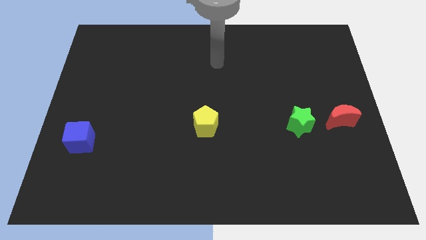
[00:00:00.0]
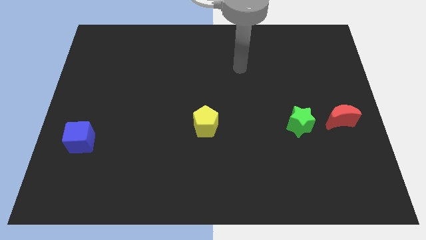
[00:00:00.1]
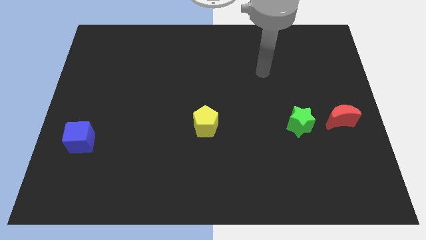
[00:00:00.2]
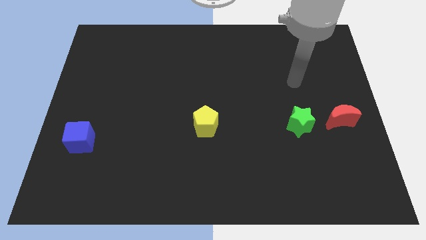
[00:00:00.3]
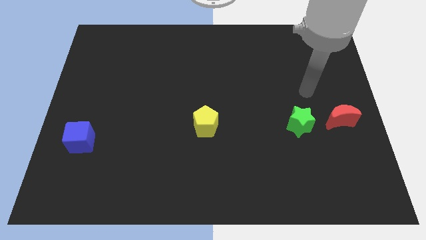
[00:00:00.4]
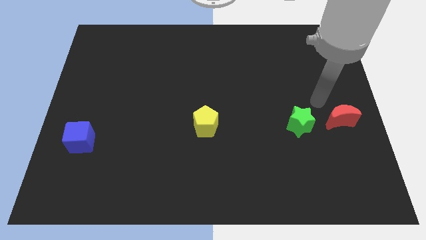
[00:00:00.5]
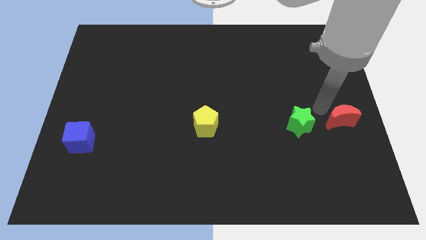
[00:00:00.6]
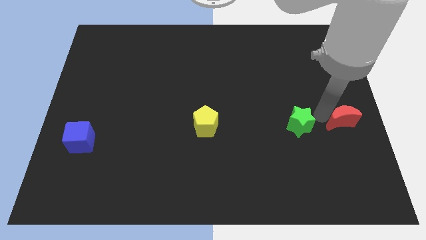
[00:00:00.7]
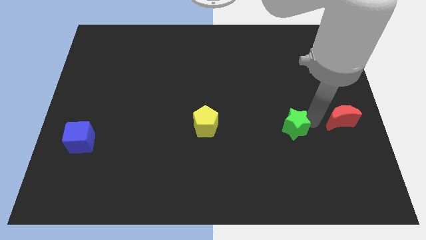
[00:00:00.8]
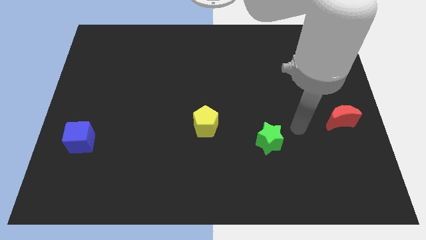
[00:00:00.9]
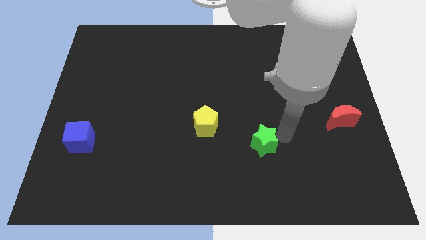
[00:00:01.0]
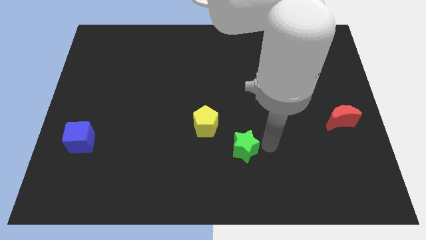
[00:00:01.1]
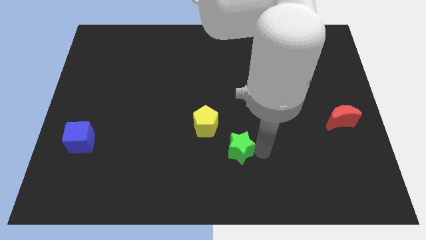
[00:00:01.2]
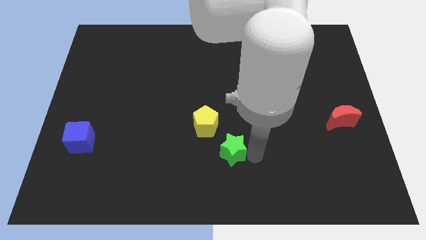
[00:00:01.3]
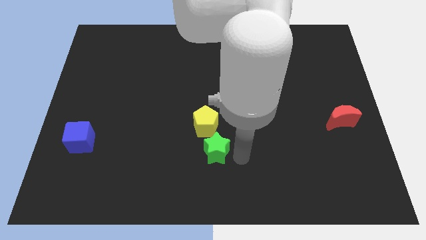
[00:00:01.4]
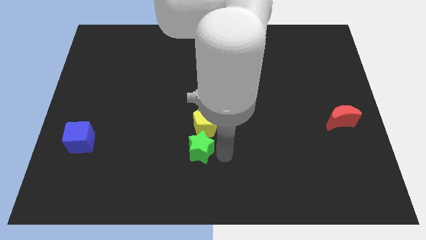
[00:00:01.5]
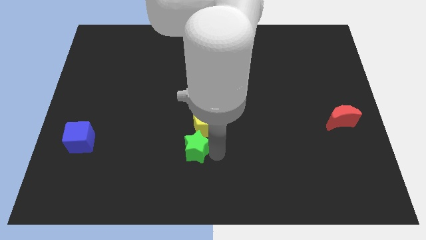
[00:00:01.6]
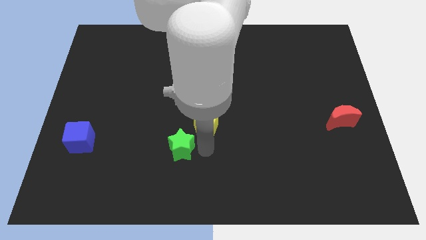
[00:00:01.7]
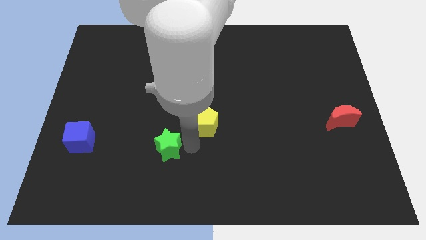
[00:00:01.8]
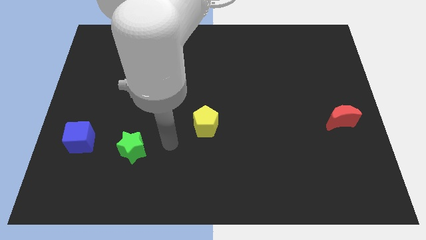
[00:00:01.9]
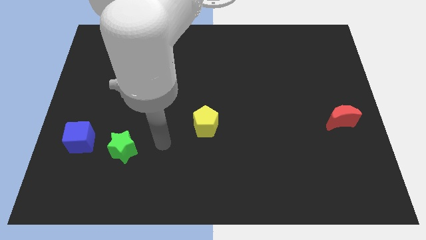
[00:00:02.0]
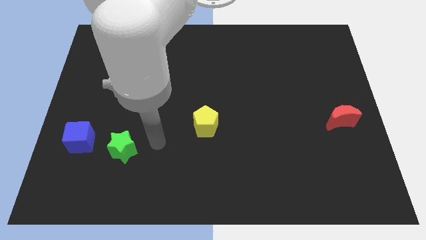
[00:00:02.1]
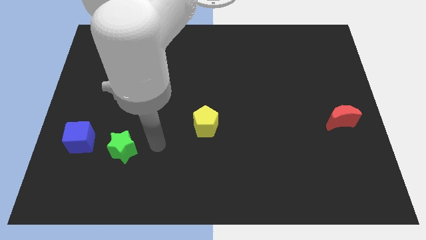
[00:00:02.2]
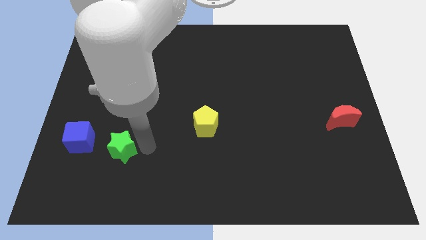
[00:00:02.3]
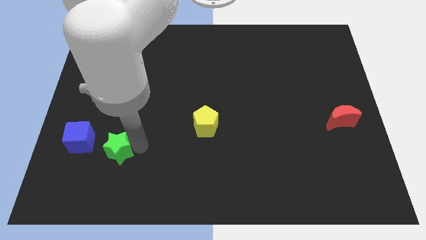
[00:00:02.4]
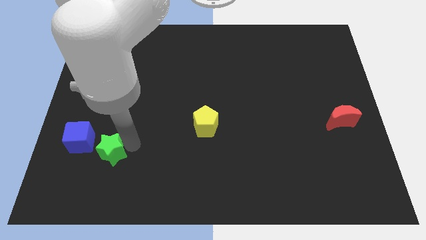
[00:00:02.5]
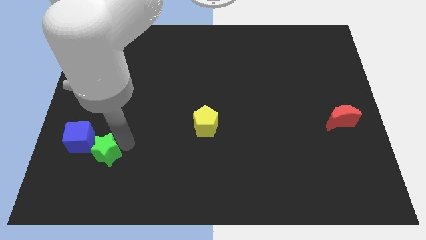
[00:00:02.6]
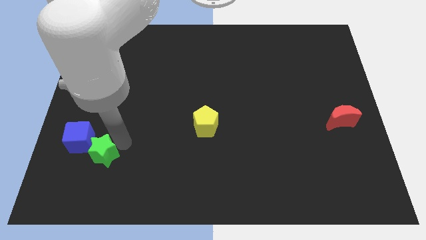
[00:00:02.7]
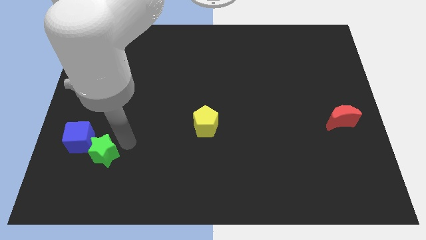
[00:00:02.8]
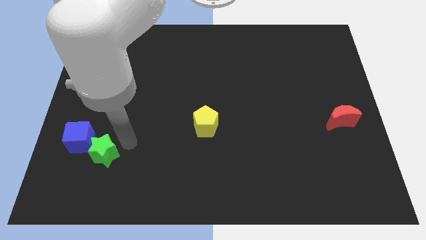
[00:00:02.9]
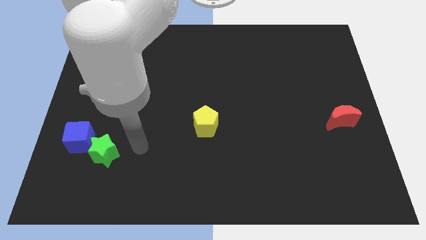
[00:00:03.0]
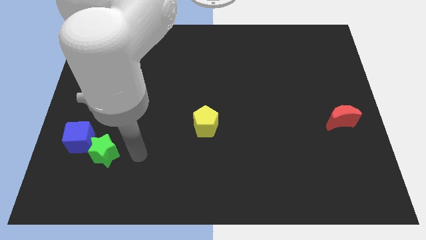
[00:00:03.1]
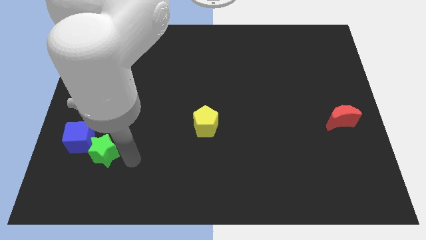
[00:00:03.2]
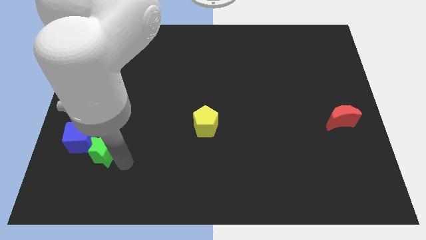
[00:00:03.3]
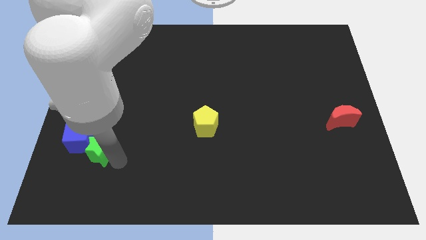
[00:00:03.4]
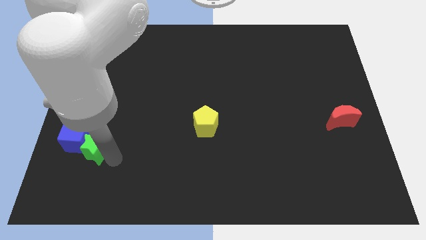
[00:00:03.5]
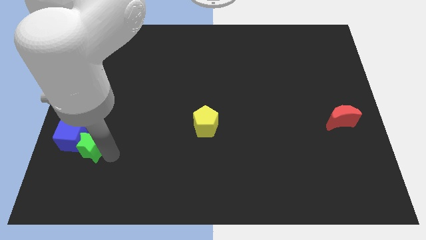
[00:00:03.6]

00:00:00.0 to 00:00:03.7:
push the star towards the blue block

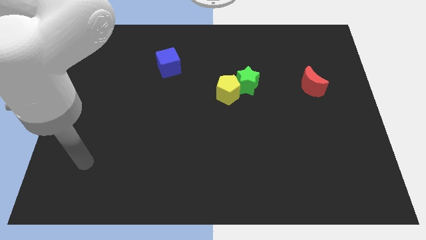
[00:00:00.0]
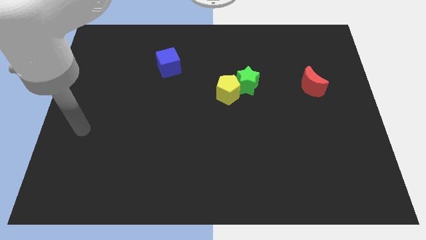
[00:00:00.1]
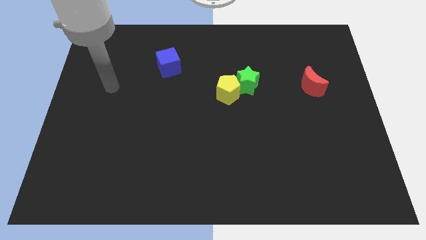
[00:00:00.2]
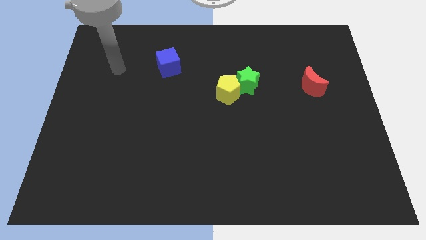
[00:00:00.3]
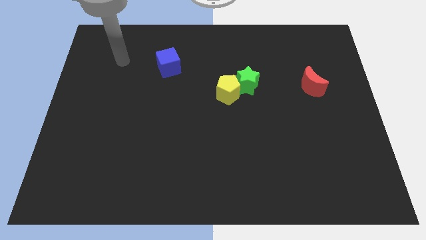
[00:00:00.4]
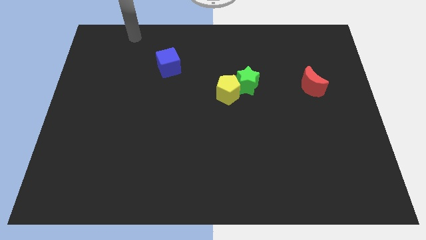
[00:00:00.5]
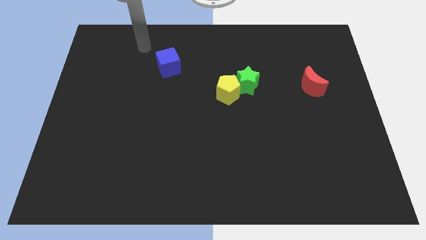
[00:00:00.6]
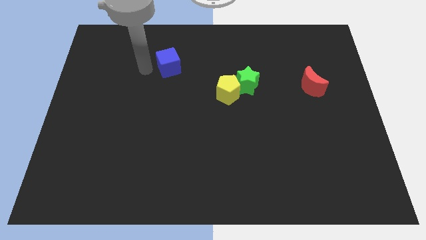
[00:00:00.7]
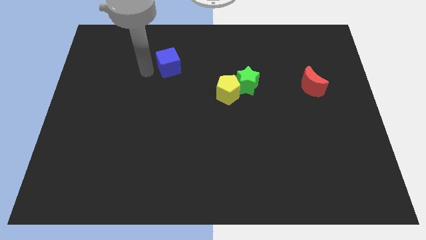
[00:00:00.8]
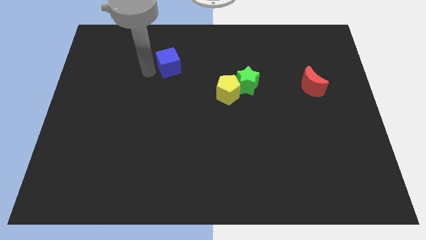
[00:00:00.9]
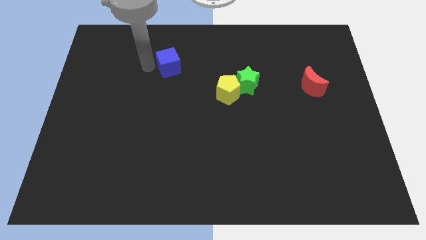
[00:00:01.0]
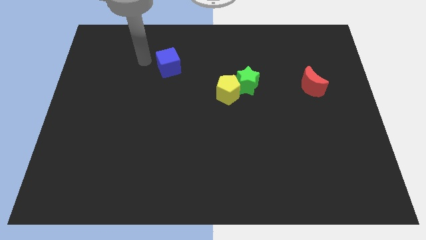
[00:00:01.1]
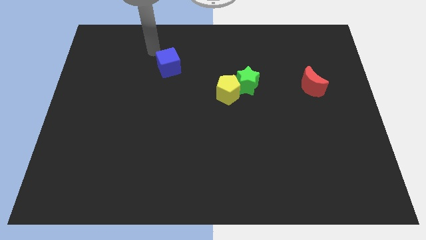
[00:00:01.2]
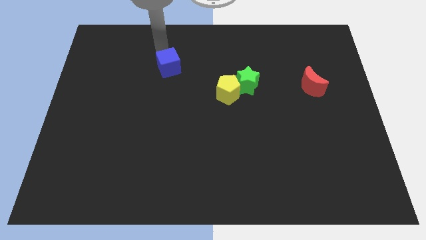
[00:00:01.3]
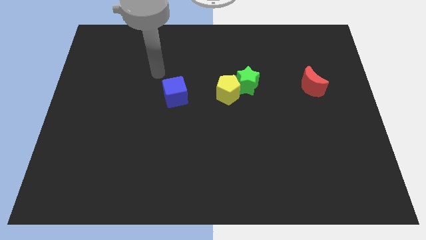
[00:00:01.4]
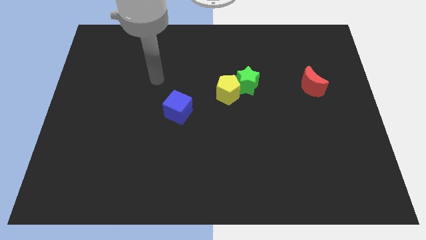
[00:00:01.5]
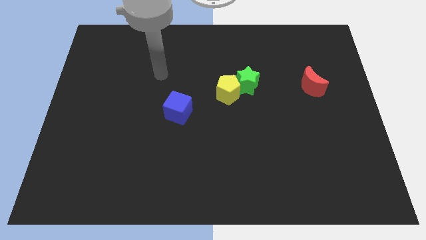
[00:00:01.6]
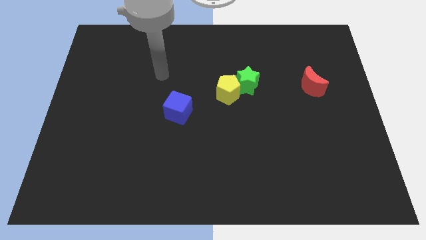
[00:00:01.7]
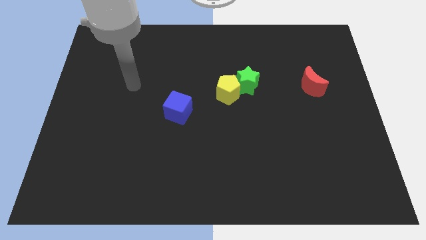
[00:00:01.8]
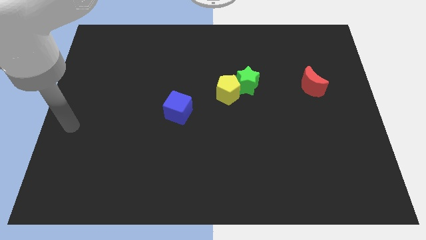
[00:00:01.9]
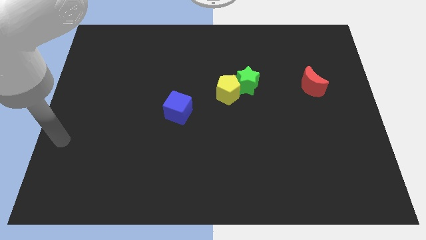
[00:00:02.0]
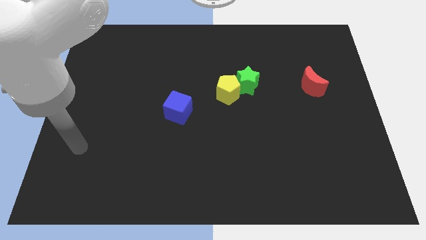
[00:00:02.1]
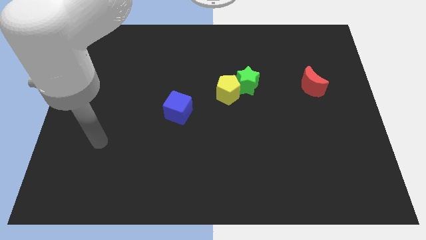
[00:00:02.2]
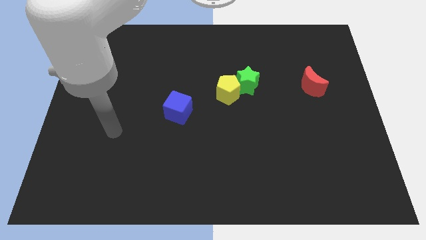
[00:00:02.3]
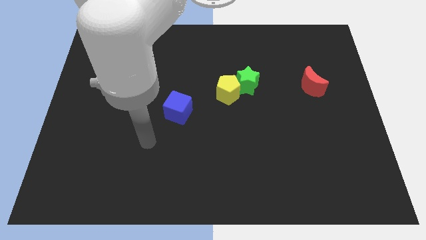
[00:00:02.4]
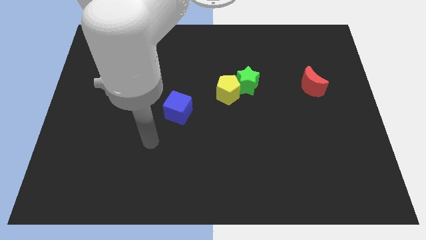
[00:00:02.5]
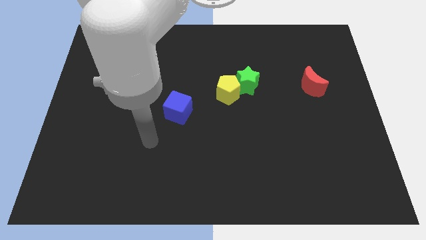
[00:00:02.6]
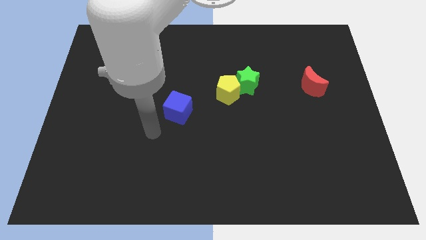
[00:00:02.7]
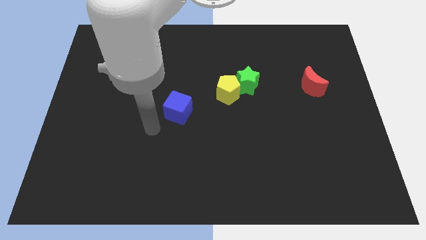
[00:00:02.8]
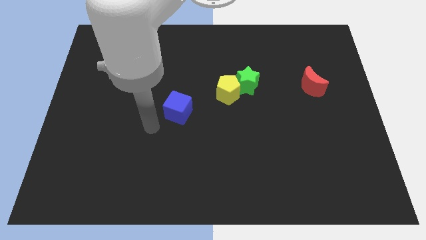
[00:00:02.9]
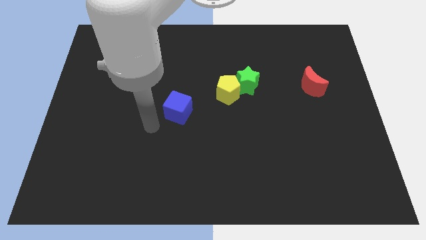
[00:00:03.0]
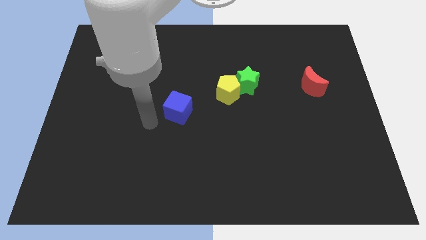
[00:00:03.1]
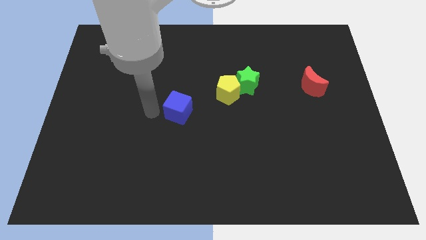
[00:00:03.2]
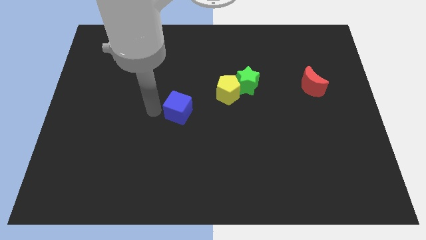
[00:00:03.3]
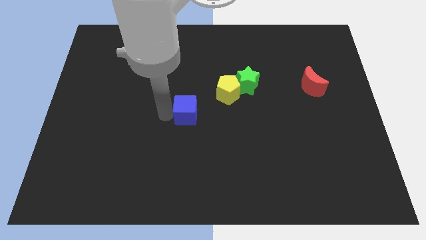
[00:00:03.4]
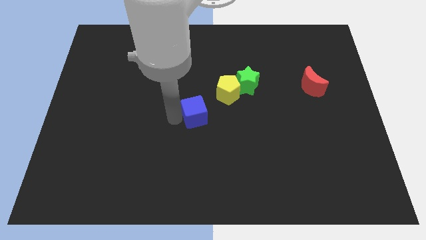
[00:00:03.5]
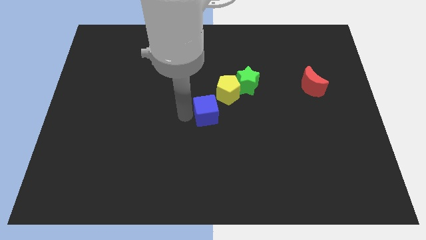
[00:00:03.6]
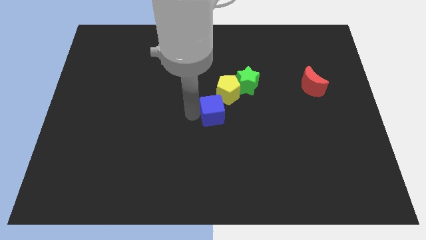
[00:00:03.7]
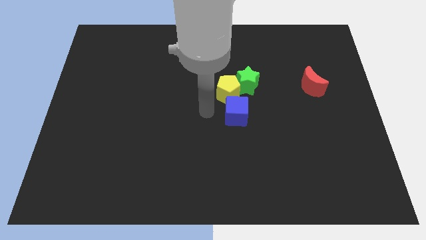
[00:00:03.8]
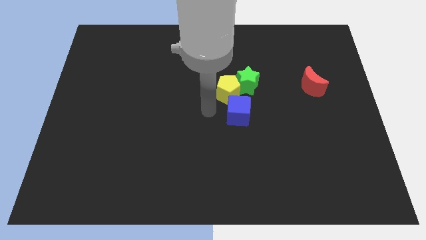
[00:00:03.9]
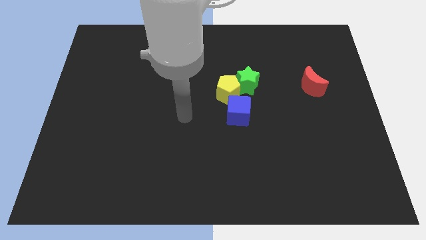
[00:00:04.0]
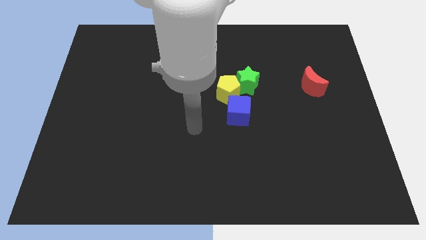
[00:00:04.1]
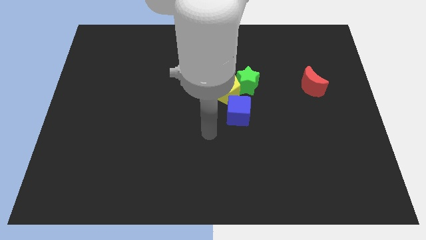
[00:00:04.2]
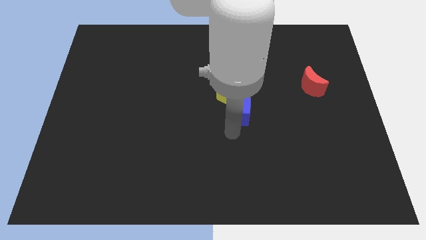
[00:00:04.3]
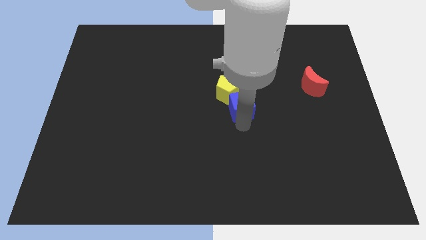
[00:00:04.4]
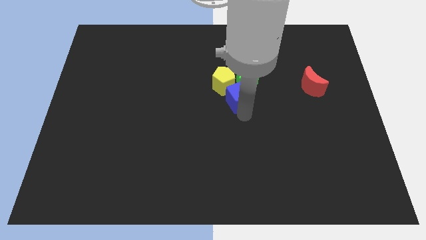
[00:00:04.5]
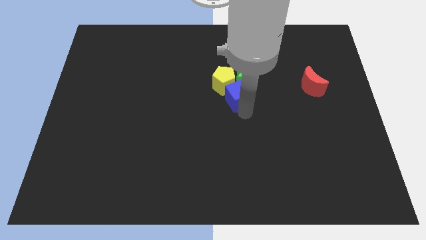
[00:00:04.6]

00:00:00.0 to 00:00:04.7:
slide the blue cube towards the pentagon

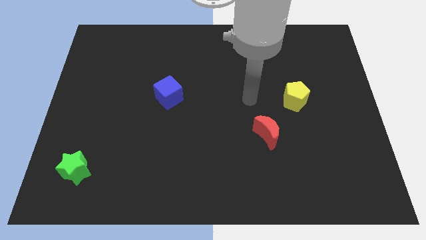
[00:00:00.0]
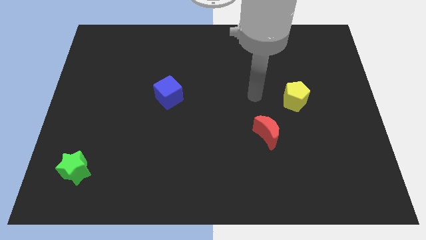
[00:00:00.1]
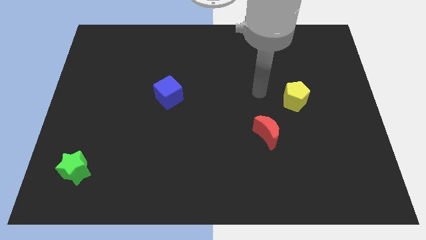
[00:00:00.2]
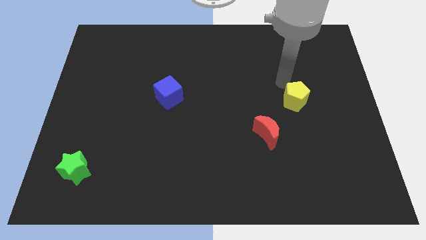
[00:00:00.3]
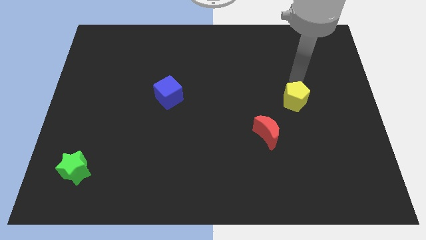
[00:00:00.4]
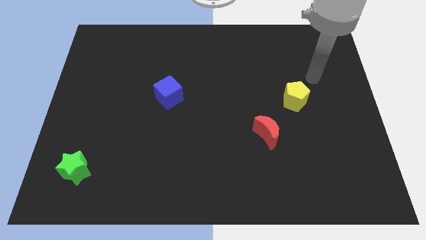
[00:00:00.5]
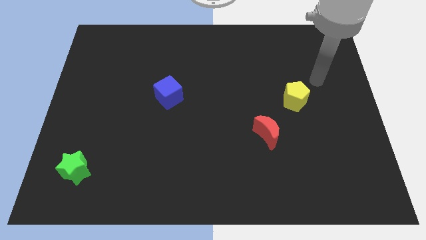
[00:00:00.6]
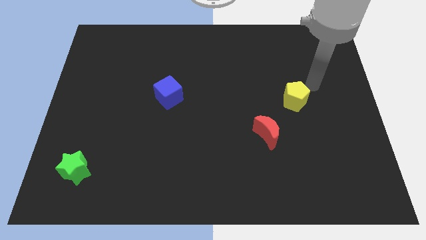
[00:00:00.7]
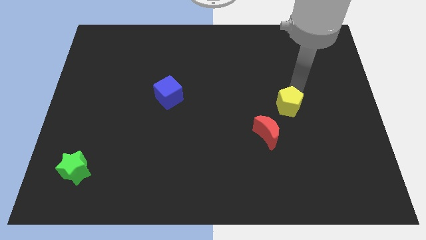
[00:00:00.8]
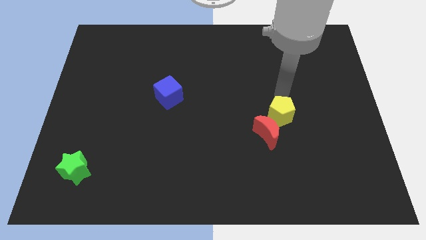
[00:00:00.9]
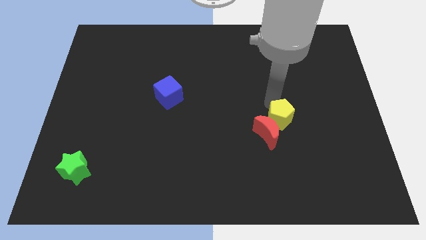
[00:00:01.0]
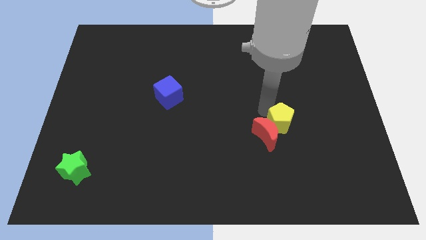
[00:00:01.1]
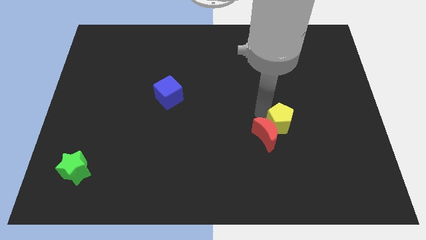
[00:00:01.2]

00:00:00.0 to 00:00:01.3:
put the yellow pentagon next to the red block
